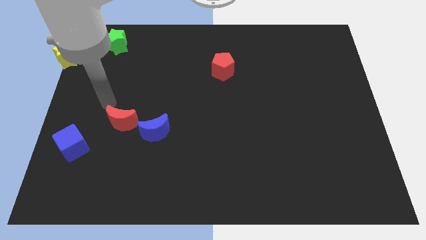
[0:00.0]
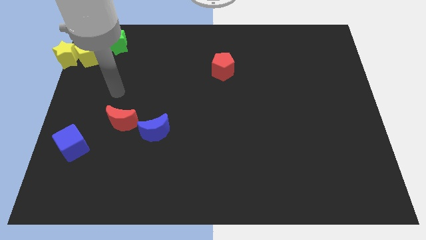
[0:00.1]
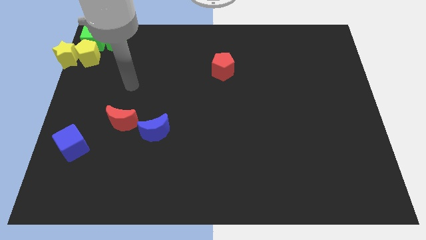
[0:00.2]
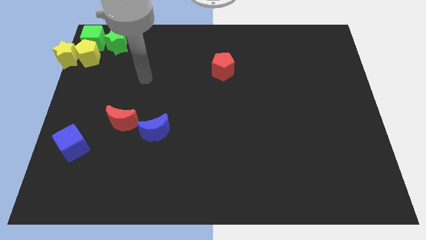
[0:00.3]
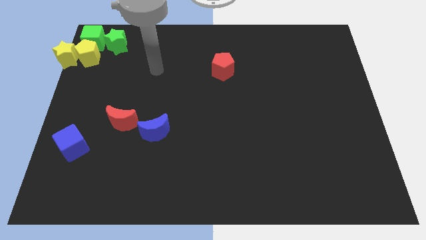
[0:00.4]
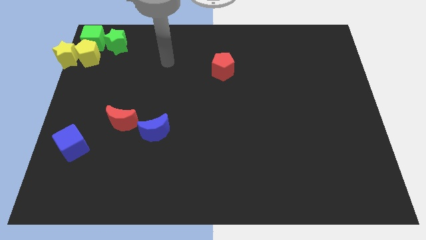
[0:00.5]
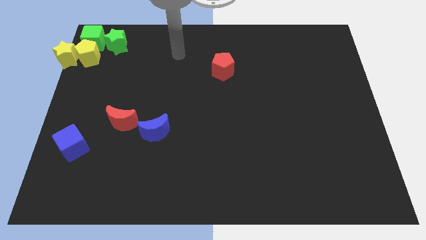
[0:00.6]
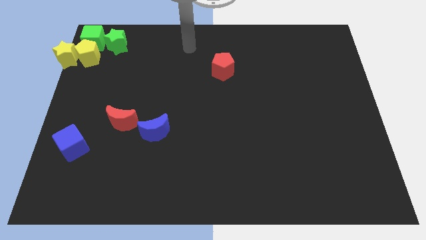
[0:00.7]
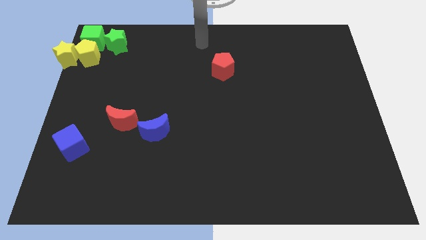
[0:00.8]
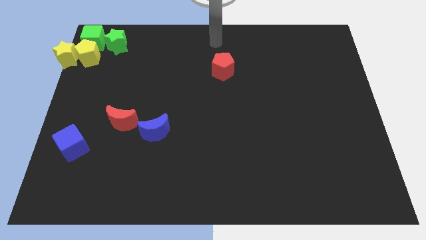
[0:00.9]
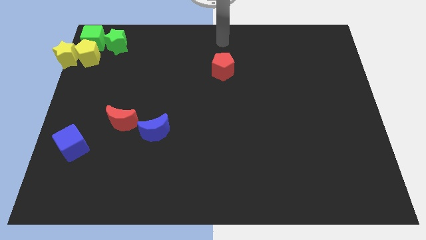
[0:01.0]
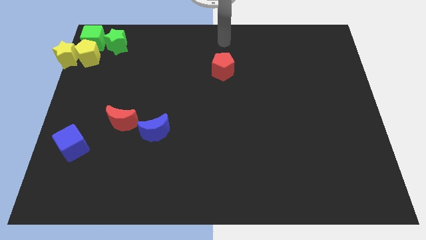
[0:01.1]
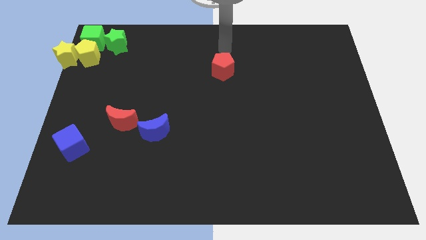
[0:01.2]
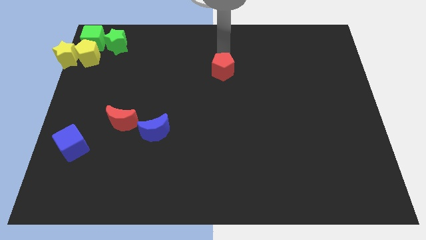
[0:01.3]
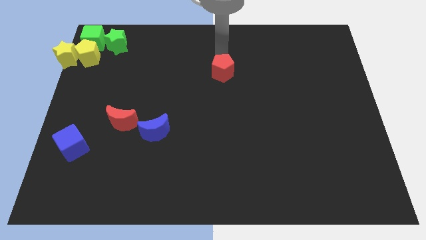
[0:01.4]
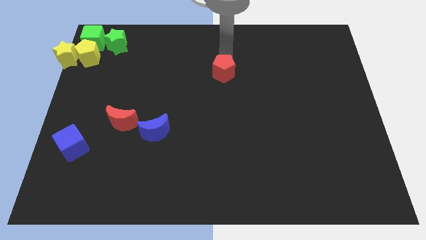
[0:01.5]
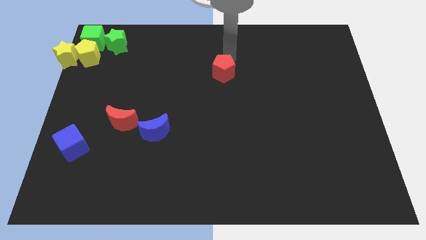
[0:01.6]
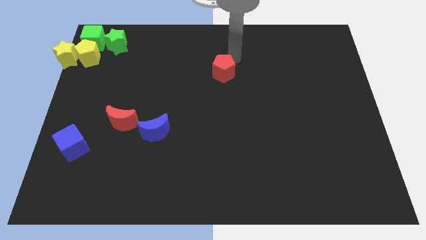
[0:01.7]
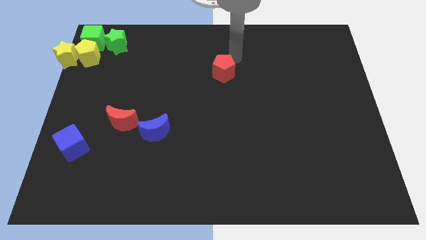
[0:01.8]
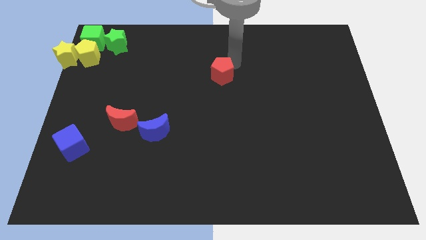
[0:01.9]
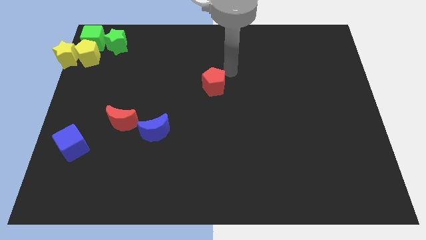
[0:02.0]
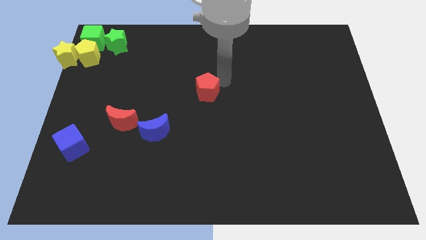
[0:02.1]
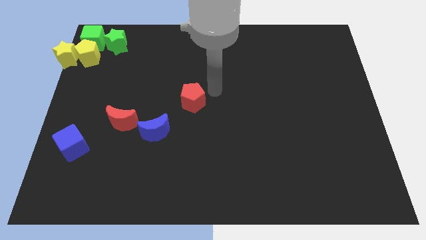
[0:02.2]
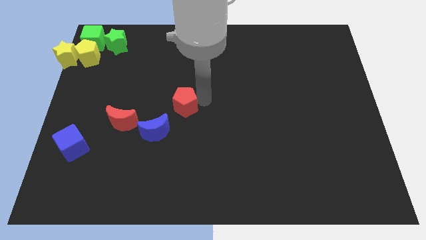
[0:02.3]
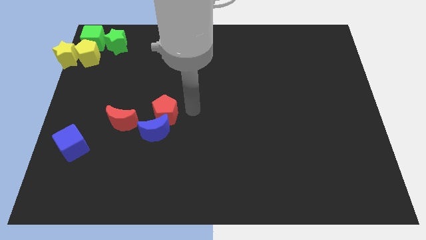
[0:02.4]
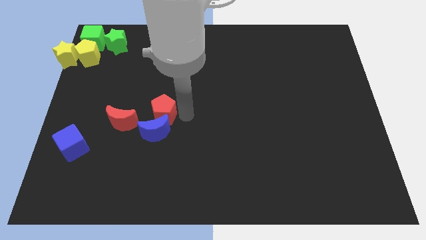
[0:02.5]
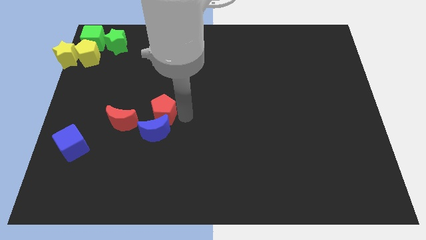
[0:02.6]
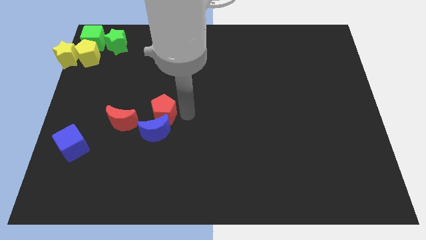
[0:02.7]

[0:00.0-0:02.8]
move the red pentagon into the blue moon

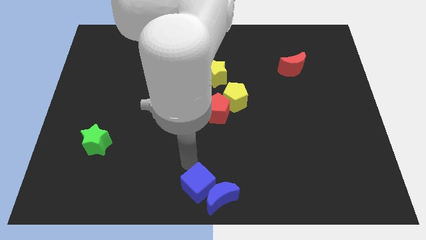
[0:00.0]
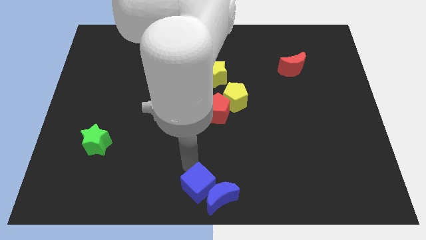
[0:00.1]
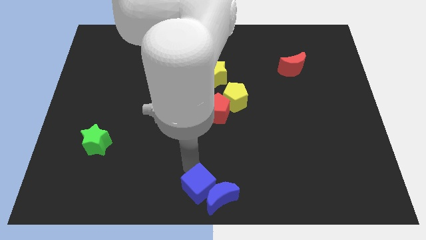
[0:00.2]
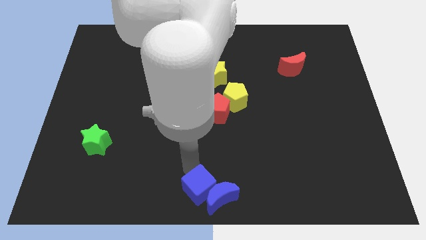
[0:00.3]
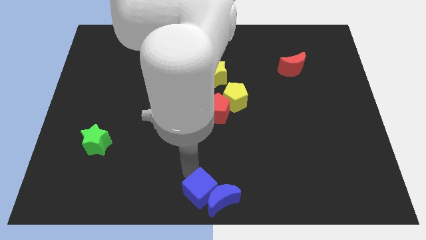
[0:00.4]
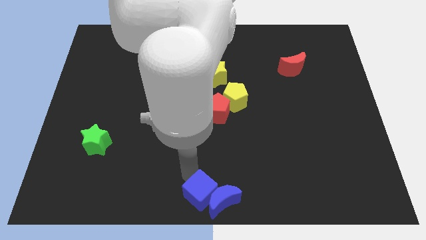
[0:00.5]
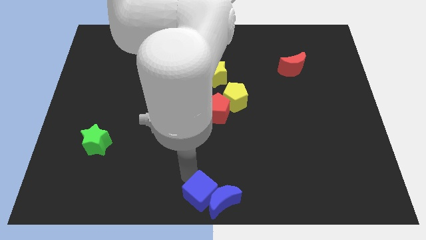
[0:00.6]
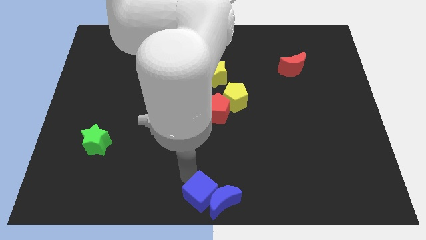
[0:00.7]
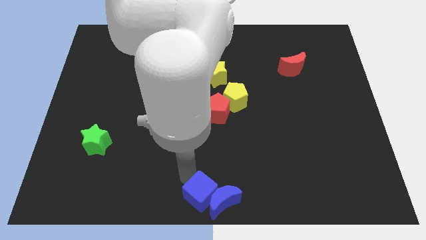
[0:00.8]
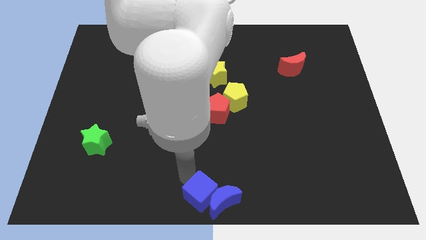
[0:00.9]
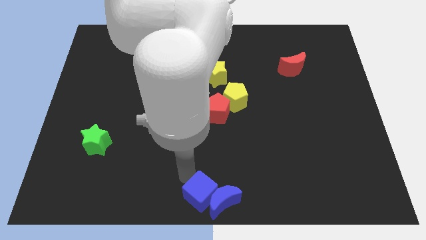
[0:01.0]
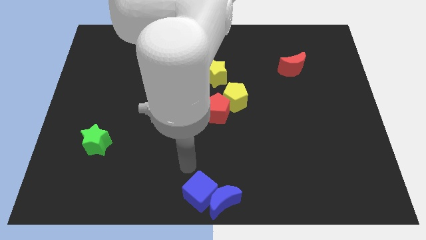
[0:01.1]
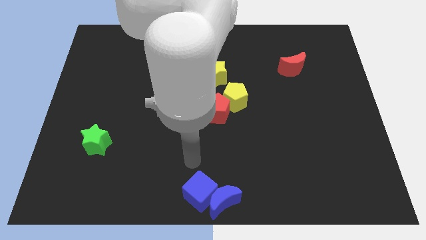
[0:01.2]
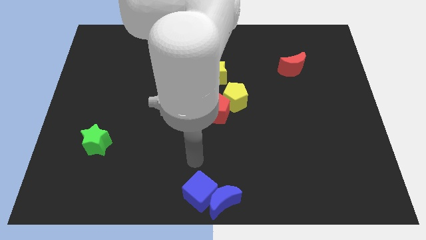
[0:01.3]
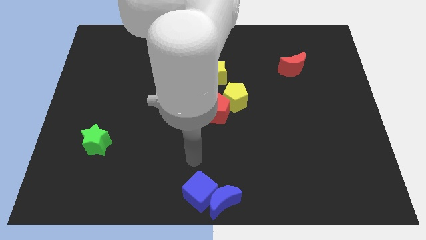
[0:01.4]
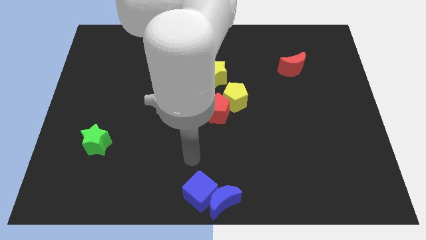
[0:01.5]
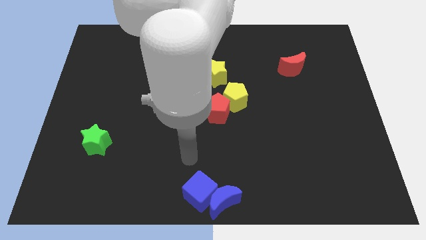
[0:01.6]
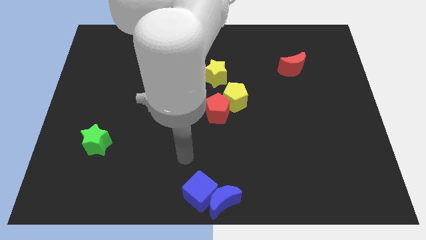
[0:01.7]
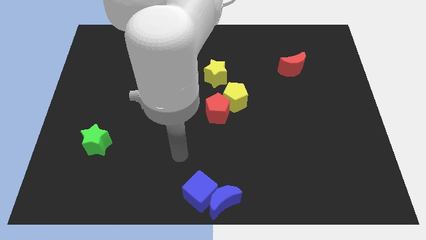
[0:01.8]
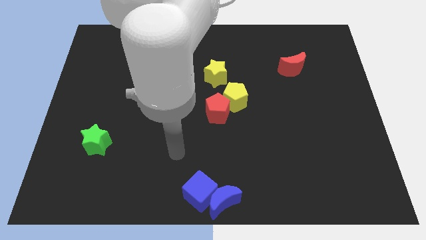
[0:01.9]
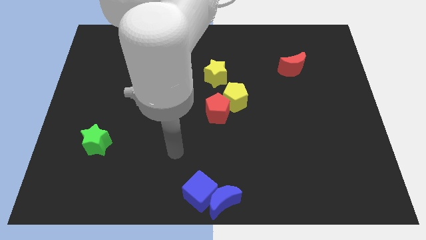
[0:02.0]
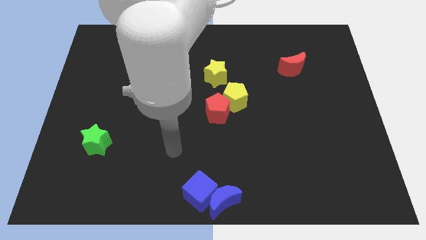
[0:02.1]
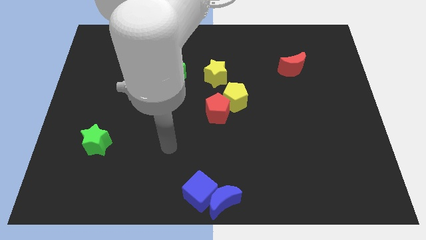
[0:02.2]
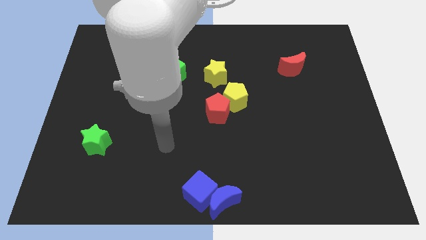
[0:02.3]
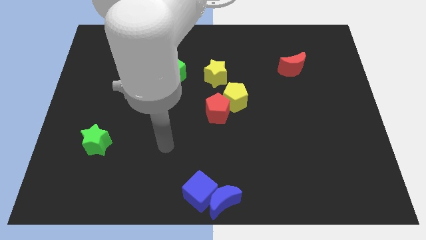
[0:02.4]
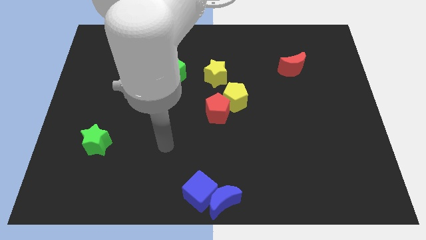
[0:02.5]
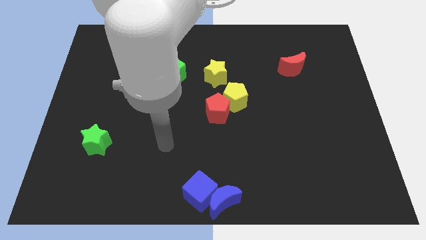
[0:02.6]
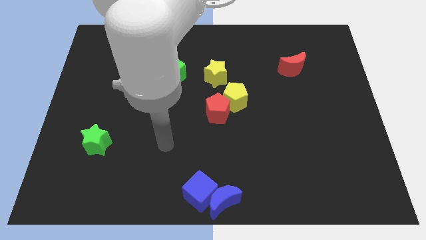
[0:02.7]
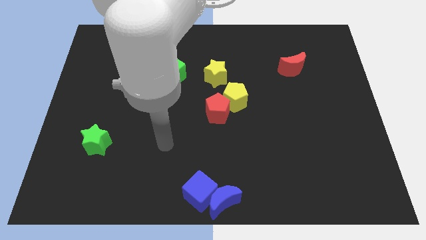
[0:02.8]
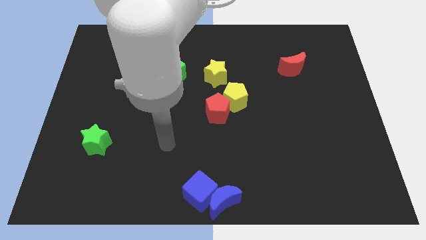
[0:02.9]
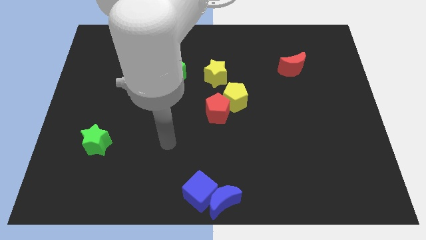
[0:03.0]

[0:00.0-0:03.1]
slide the blue cube to bottom center of the board

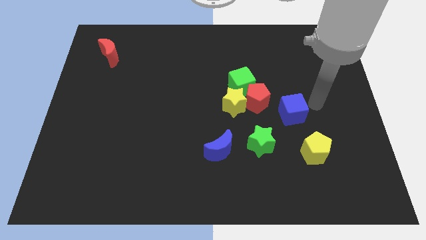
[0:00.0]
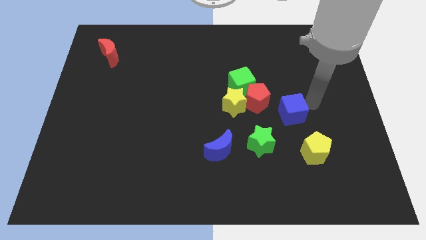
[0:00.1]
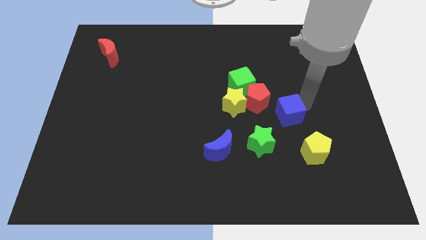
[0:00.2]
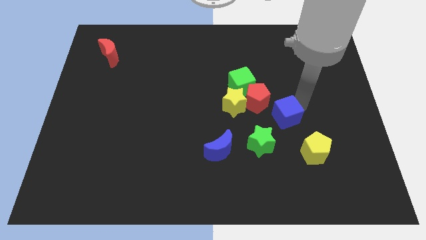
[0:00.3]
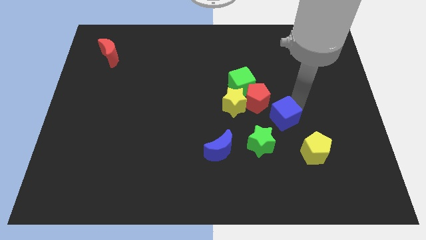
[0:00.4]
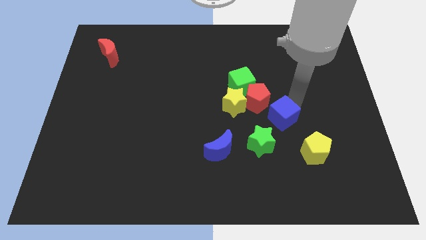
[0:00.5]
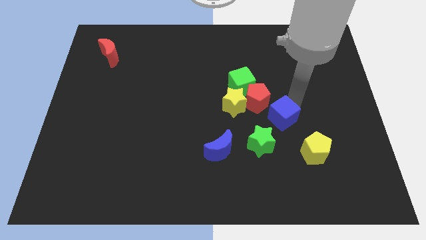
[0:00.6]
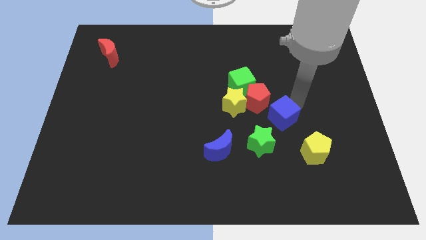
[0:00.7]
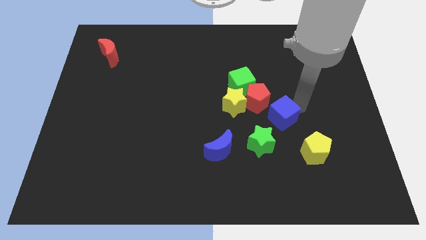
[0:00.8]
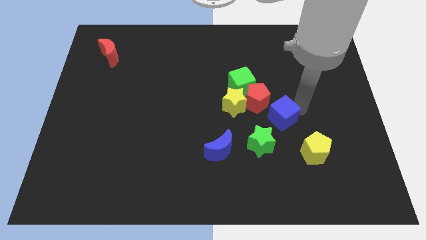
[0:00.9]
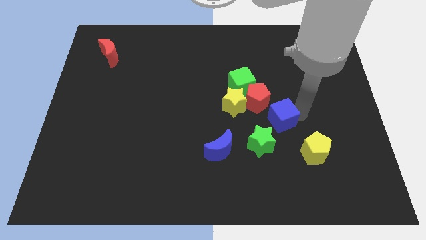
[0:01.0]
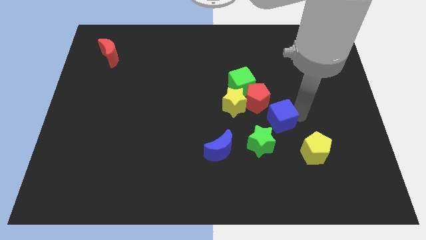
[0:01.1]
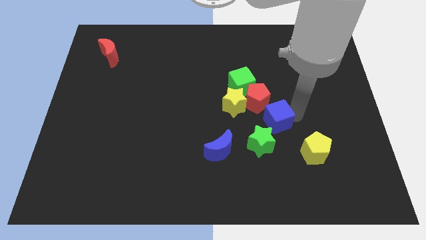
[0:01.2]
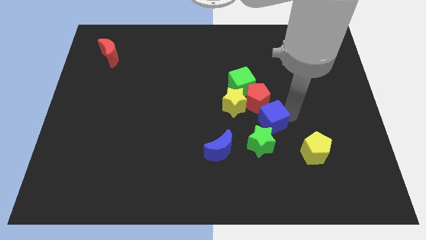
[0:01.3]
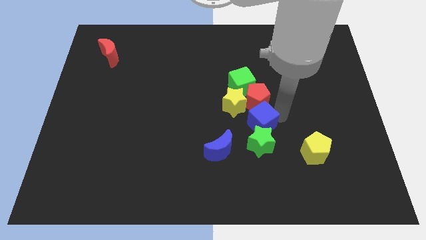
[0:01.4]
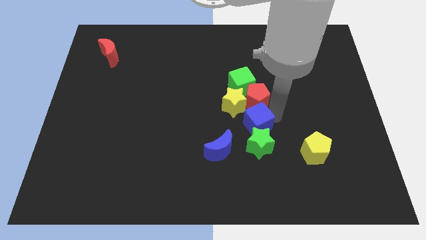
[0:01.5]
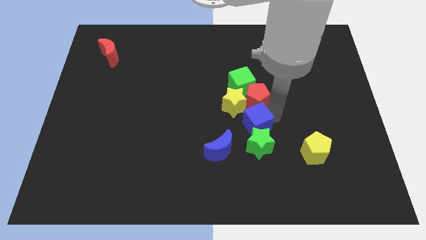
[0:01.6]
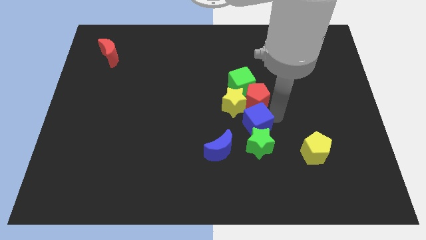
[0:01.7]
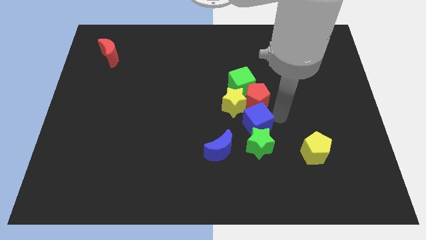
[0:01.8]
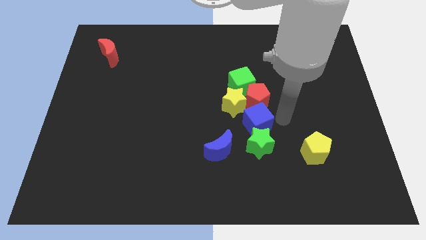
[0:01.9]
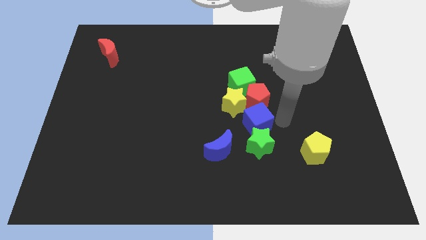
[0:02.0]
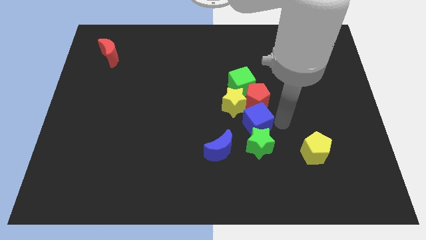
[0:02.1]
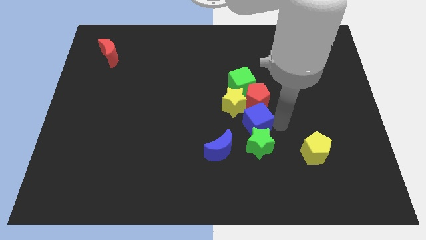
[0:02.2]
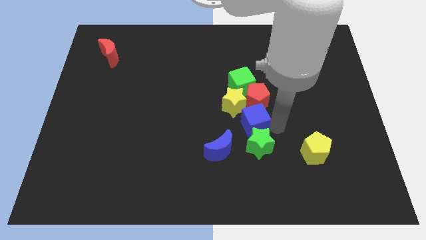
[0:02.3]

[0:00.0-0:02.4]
move the blue cube between the red pentagon and green star

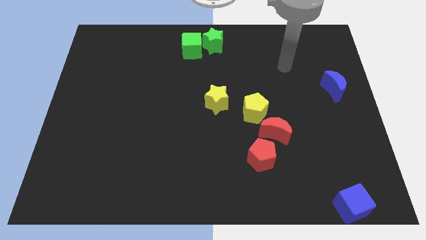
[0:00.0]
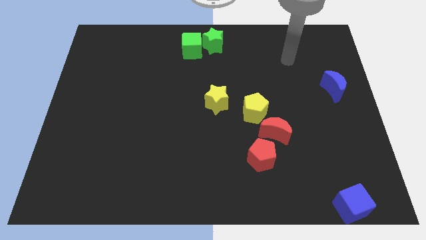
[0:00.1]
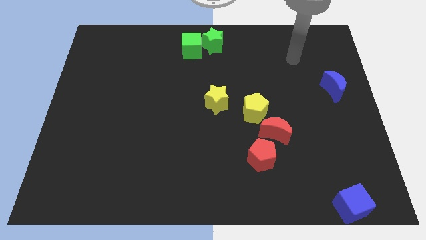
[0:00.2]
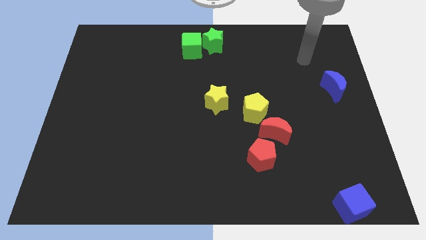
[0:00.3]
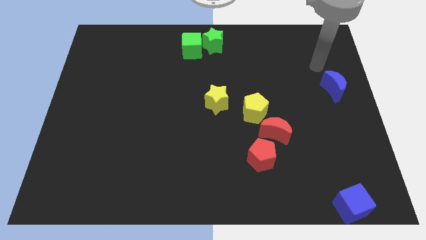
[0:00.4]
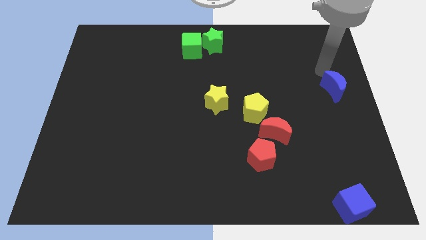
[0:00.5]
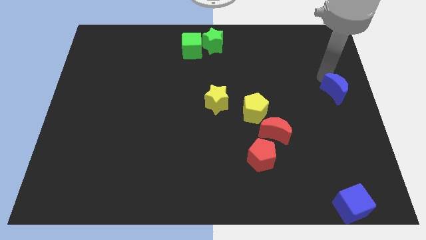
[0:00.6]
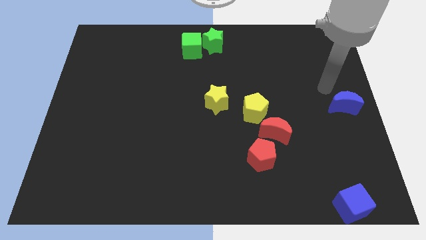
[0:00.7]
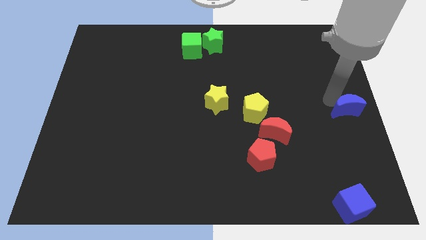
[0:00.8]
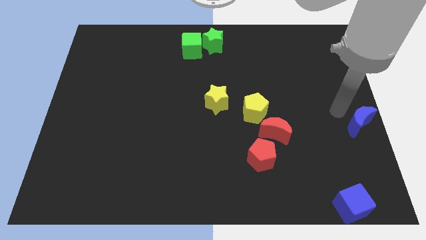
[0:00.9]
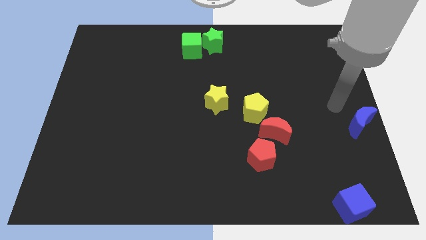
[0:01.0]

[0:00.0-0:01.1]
slide blue moon to the center right
